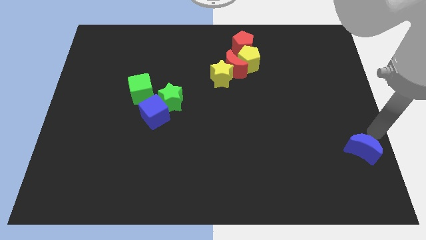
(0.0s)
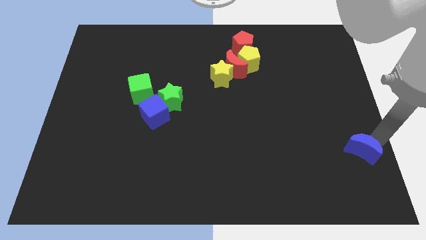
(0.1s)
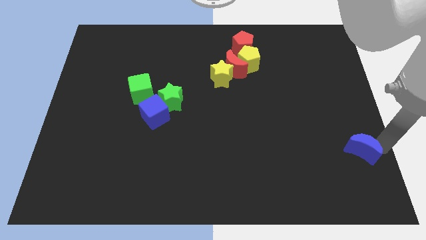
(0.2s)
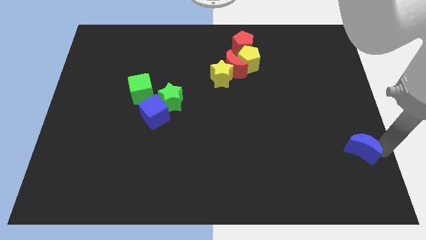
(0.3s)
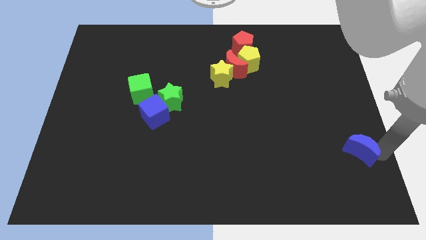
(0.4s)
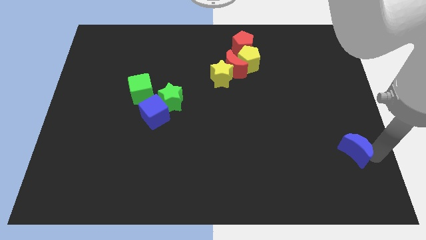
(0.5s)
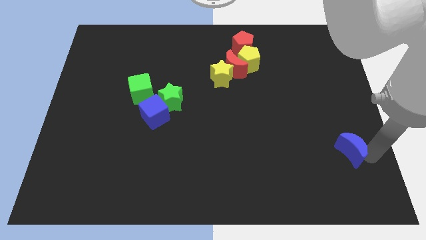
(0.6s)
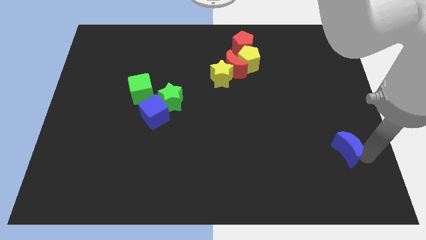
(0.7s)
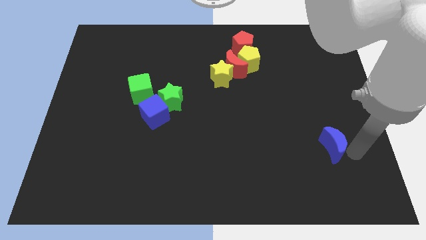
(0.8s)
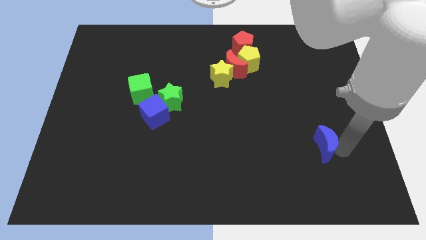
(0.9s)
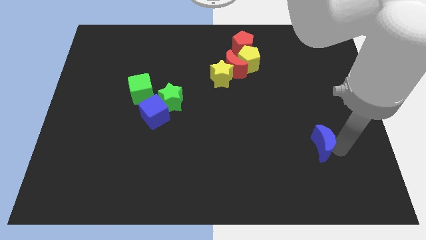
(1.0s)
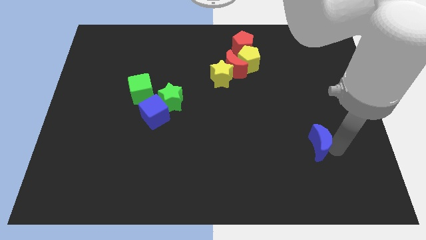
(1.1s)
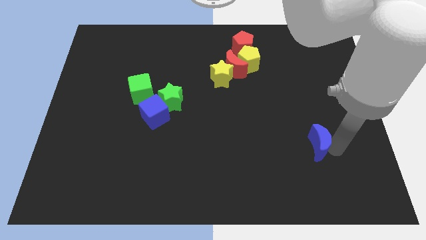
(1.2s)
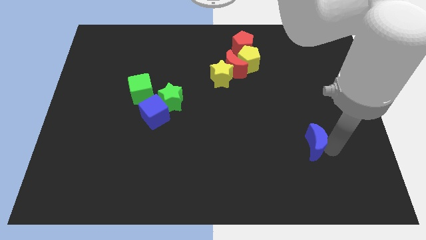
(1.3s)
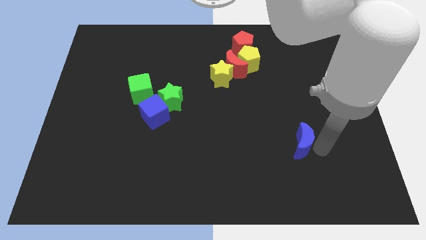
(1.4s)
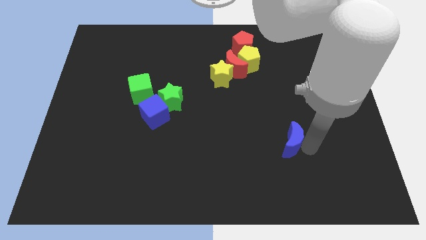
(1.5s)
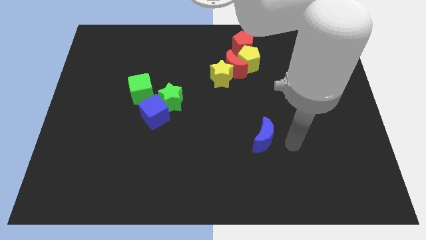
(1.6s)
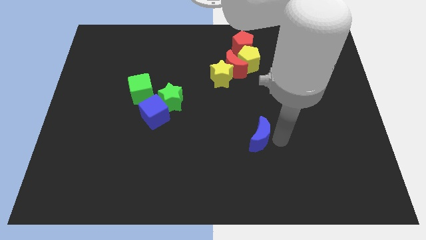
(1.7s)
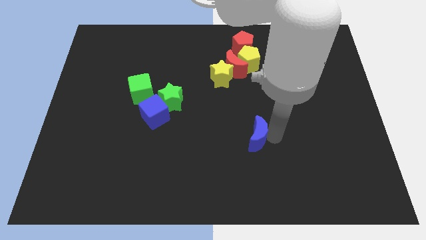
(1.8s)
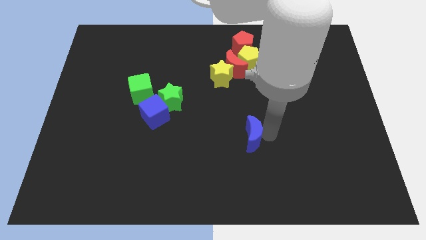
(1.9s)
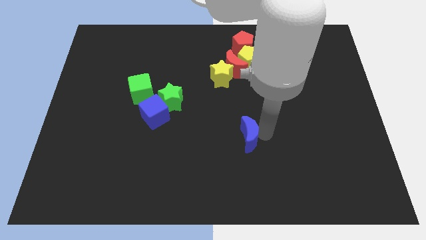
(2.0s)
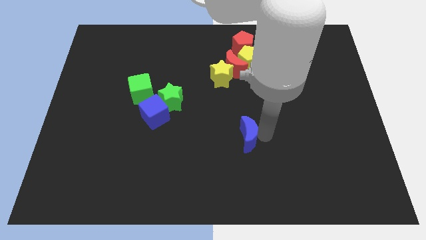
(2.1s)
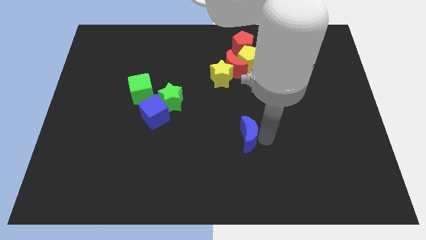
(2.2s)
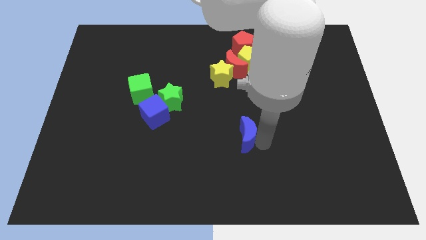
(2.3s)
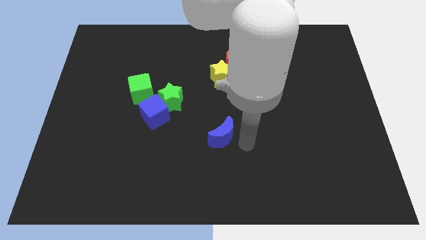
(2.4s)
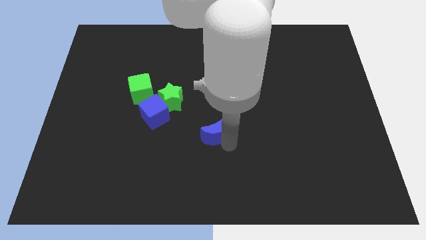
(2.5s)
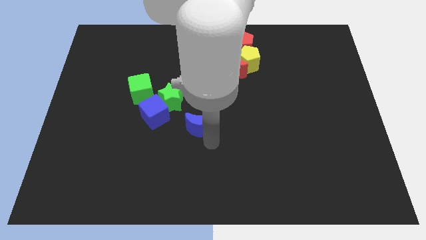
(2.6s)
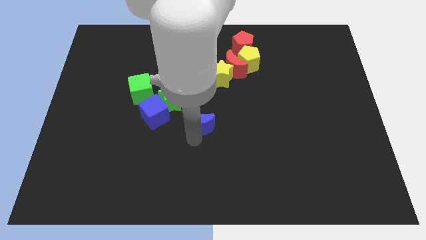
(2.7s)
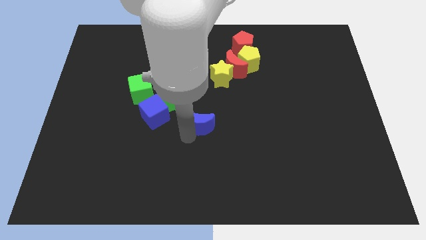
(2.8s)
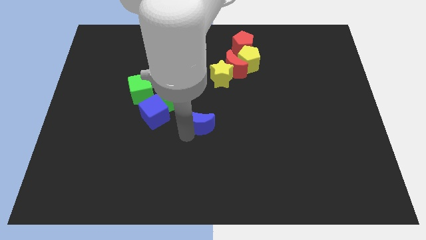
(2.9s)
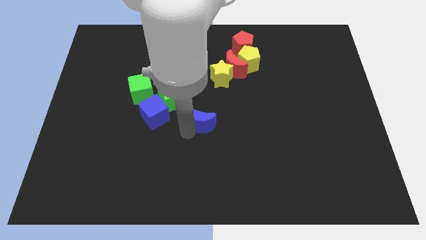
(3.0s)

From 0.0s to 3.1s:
move the blue moon parallel to blue cube

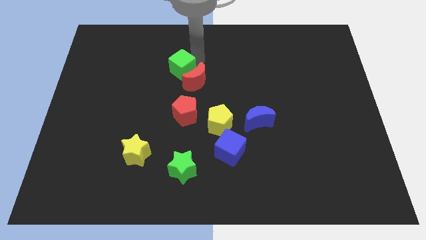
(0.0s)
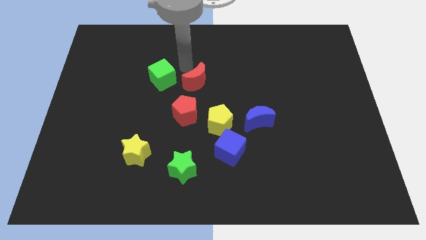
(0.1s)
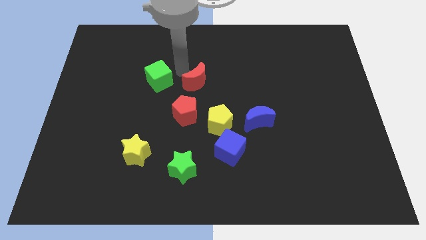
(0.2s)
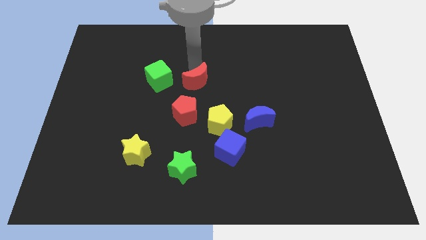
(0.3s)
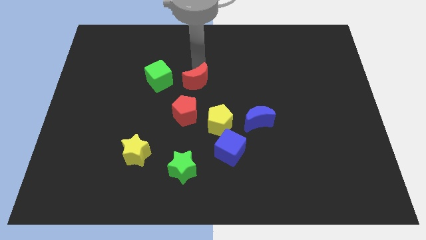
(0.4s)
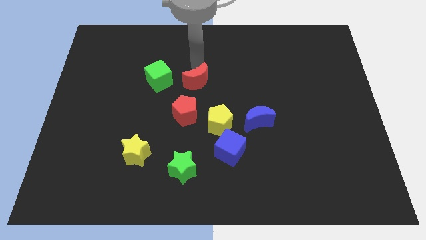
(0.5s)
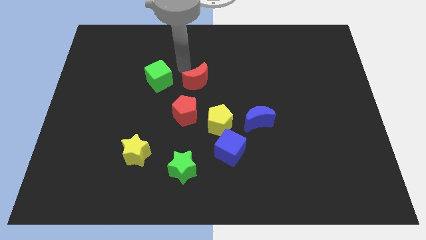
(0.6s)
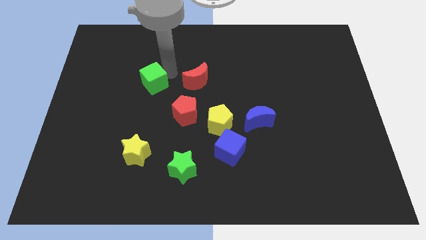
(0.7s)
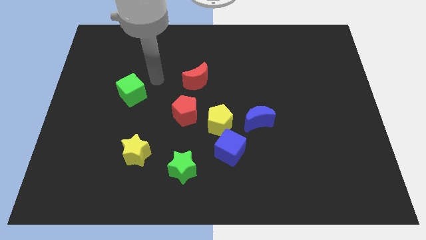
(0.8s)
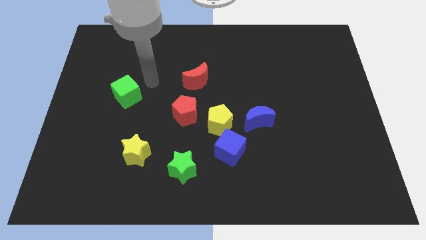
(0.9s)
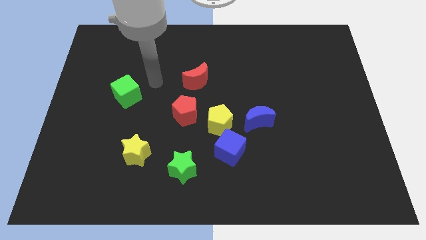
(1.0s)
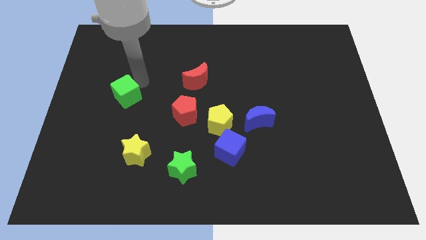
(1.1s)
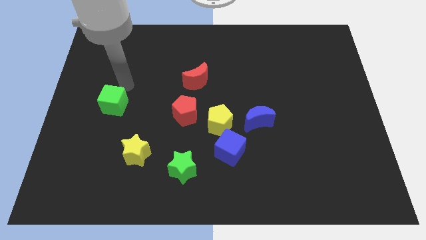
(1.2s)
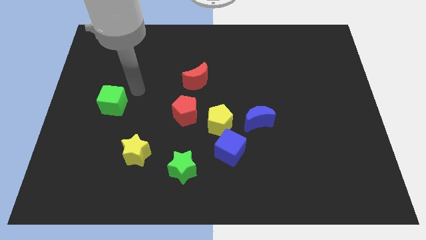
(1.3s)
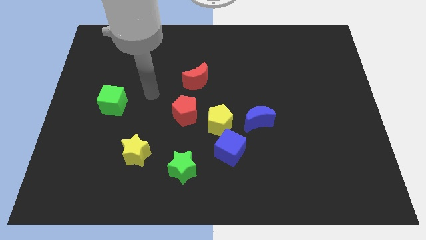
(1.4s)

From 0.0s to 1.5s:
push the green cube towards the center left

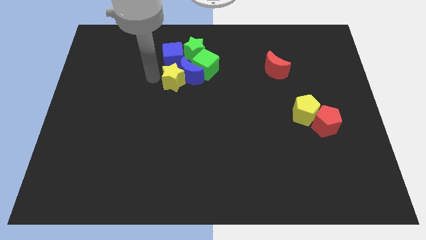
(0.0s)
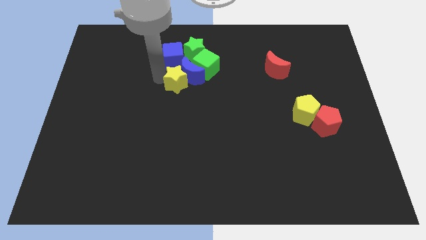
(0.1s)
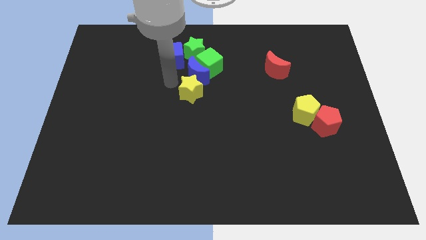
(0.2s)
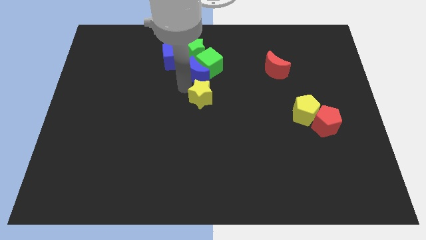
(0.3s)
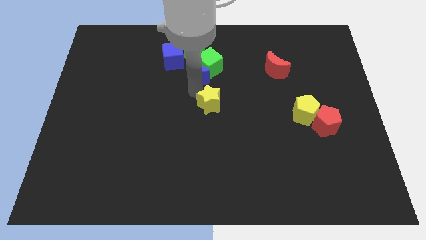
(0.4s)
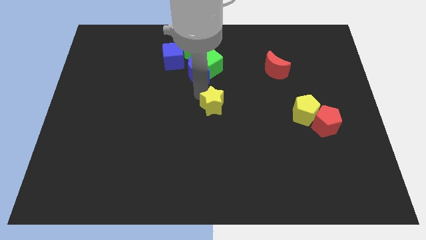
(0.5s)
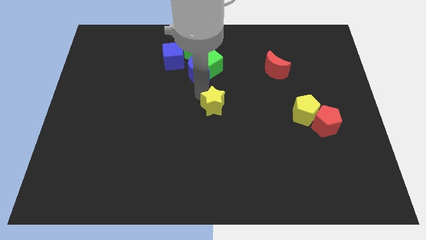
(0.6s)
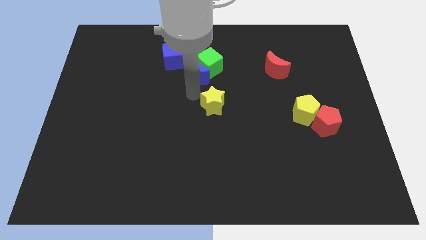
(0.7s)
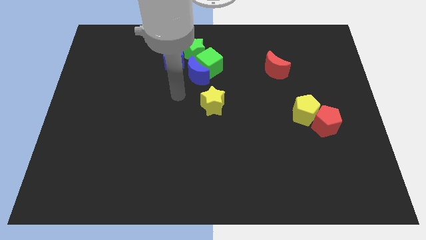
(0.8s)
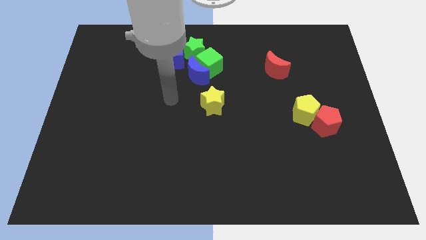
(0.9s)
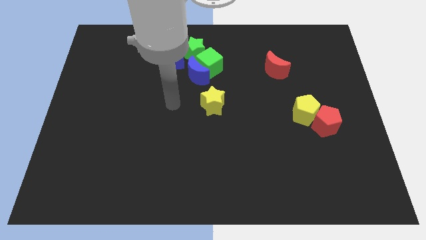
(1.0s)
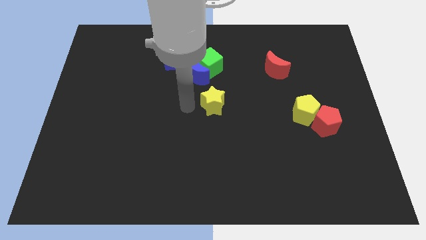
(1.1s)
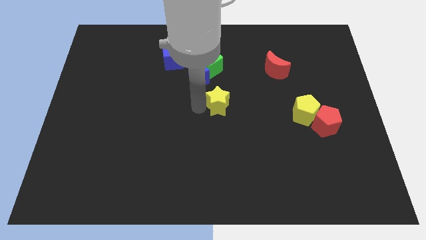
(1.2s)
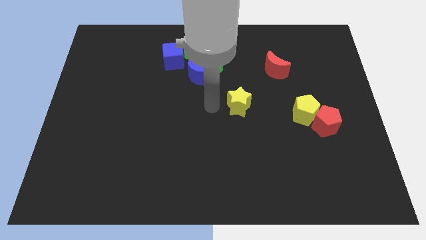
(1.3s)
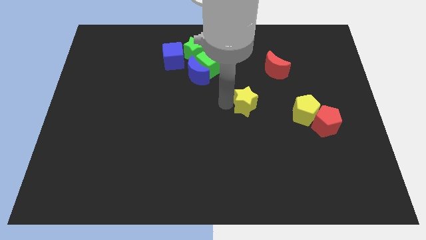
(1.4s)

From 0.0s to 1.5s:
separate the yellow star from the group of blocks

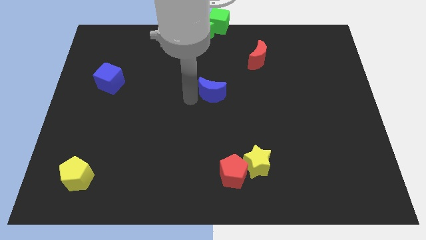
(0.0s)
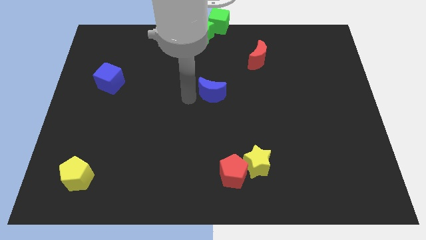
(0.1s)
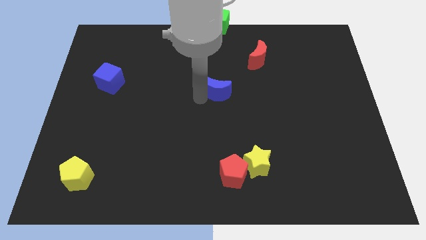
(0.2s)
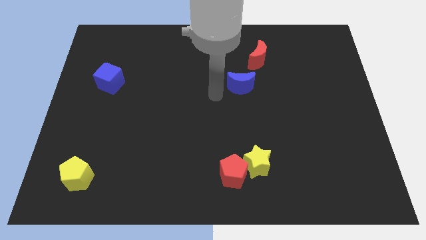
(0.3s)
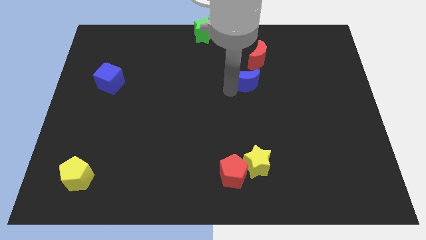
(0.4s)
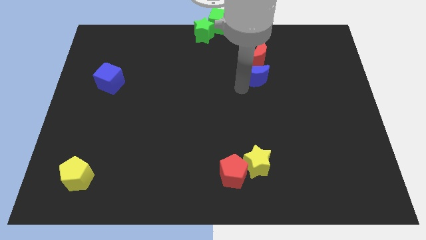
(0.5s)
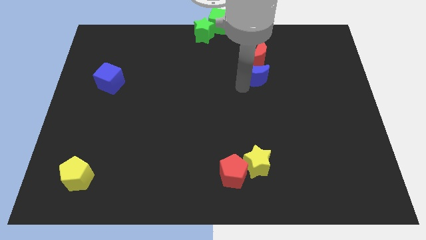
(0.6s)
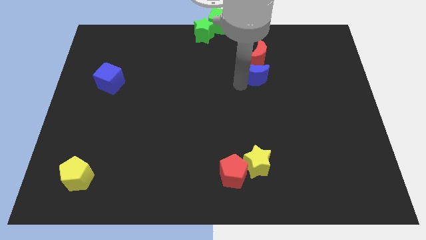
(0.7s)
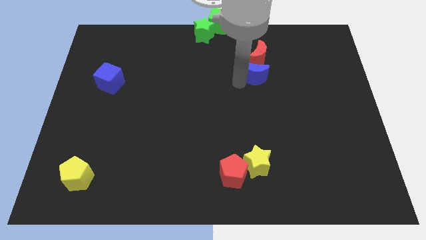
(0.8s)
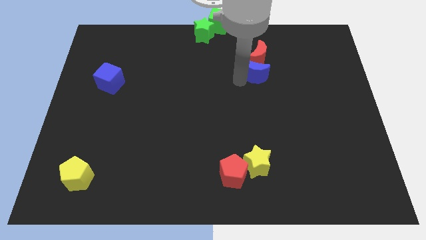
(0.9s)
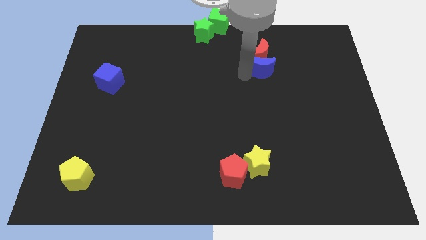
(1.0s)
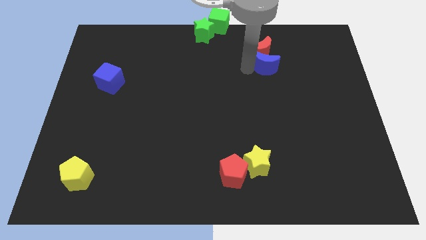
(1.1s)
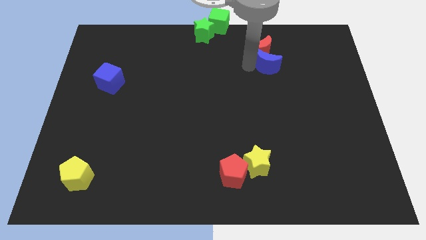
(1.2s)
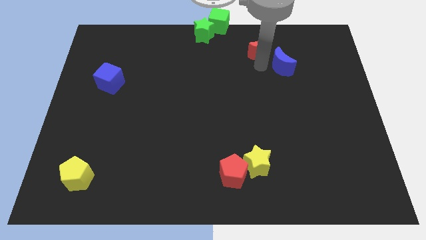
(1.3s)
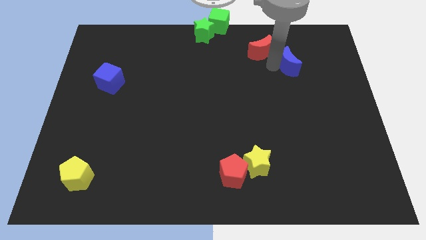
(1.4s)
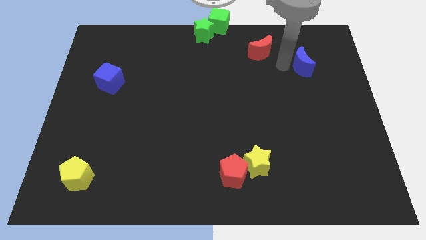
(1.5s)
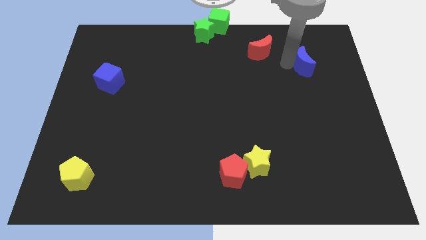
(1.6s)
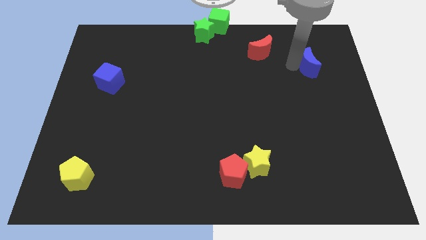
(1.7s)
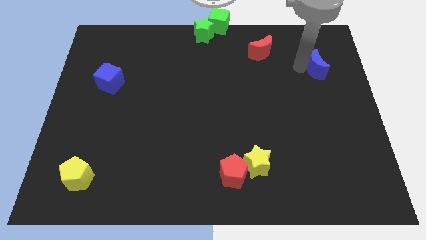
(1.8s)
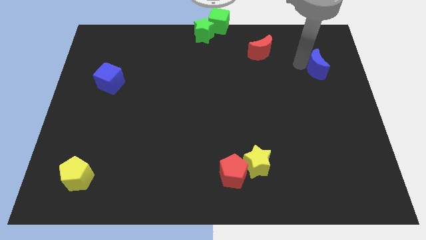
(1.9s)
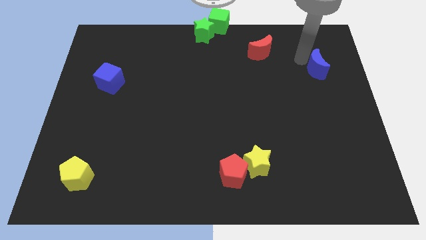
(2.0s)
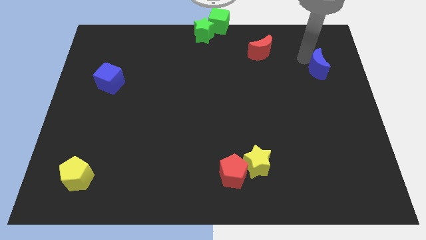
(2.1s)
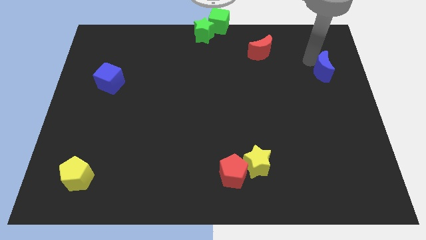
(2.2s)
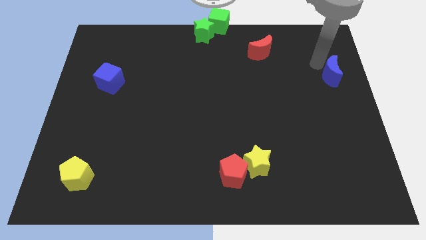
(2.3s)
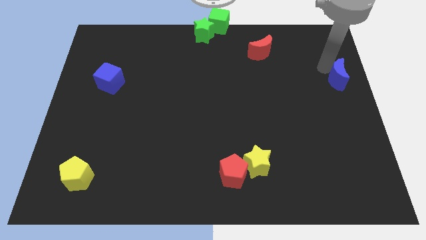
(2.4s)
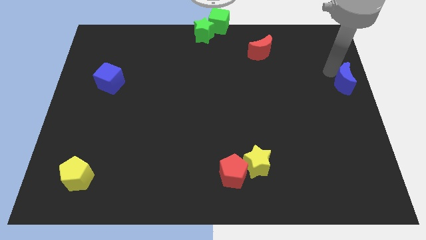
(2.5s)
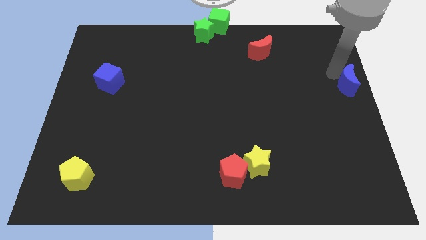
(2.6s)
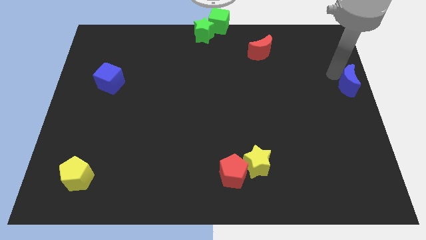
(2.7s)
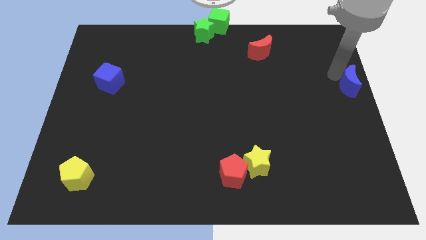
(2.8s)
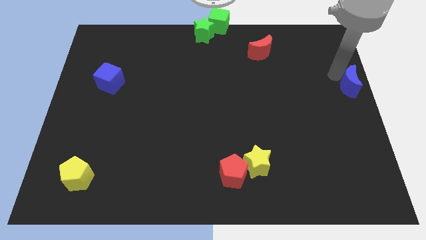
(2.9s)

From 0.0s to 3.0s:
slide the blue moon to the right side of the board
